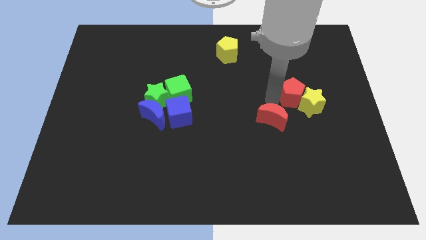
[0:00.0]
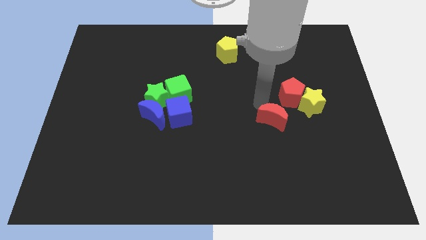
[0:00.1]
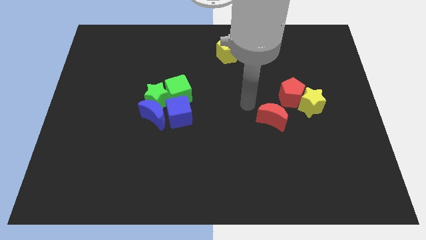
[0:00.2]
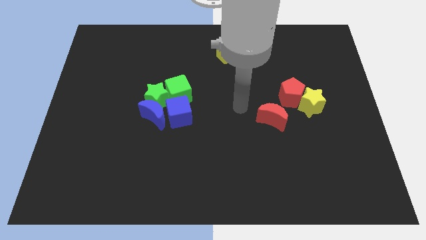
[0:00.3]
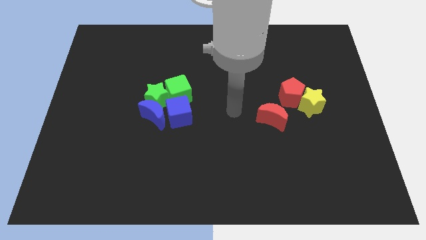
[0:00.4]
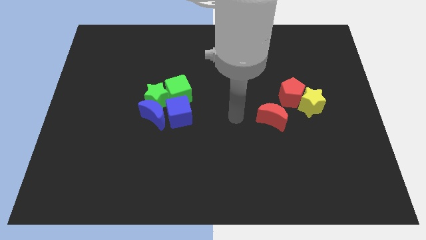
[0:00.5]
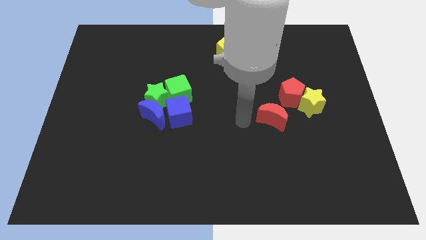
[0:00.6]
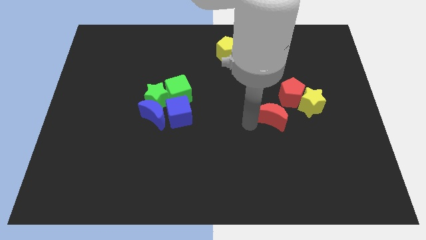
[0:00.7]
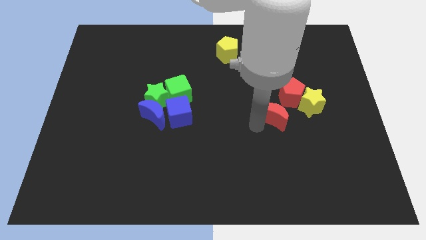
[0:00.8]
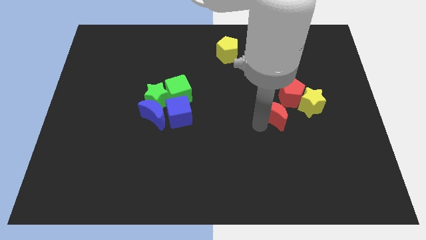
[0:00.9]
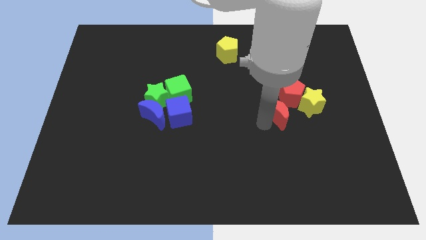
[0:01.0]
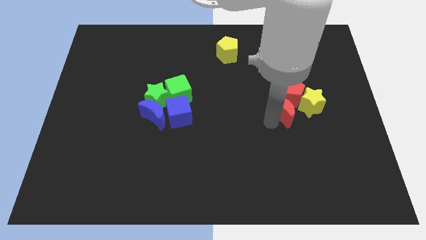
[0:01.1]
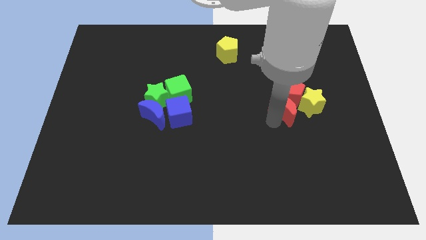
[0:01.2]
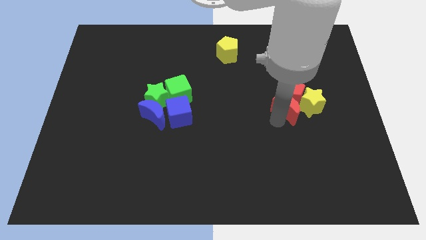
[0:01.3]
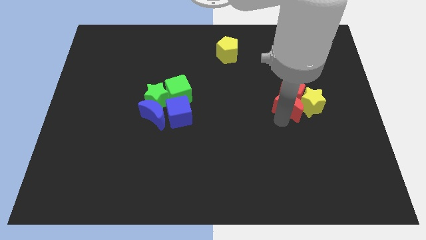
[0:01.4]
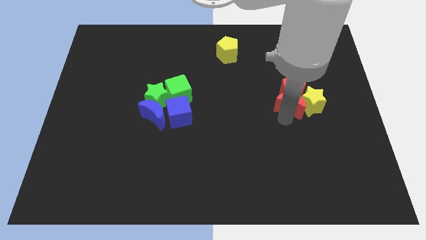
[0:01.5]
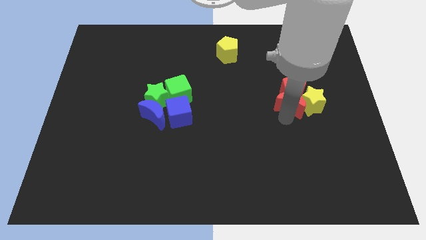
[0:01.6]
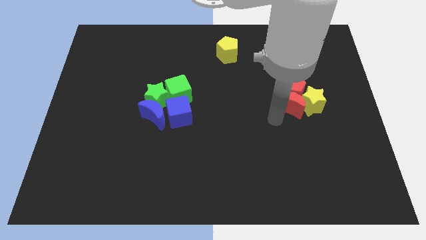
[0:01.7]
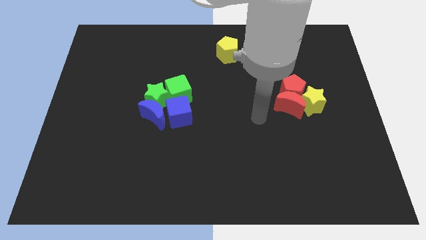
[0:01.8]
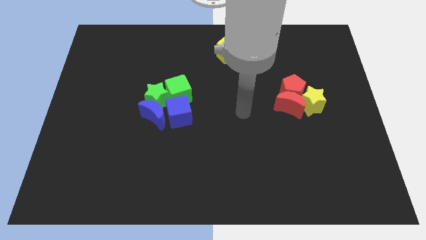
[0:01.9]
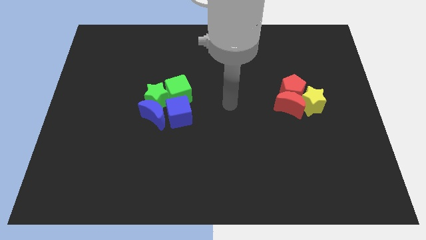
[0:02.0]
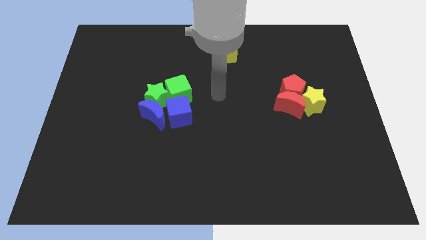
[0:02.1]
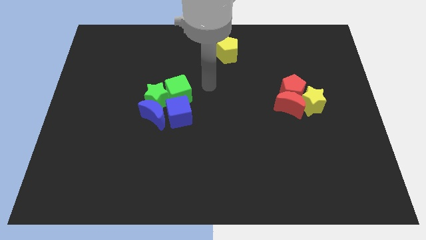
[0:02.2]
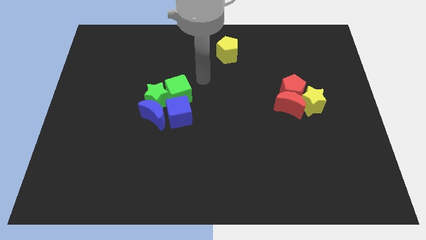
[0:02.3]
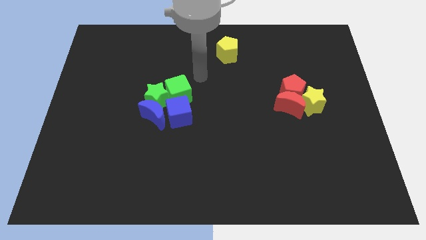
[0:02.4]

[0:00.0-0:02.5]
push the red moon into the red pentagon and yellow star

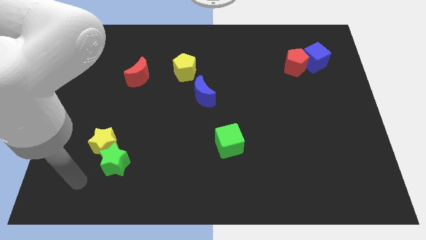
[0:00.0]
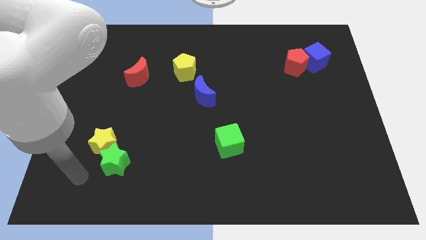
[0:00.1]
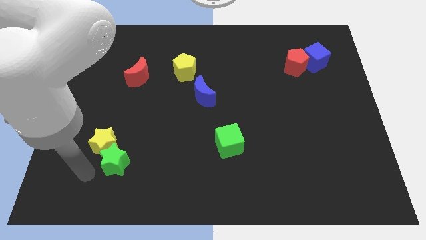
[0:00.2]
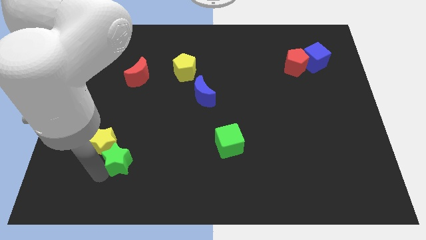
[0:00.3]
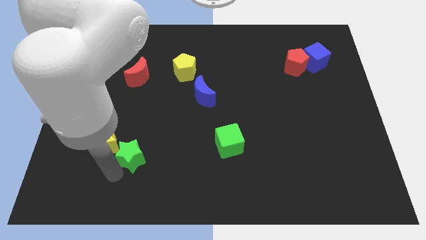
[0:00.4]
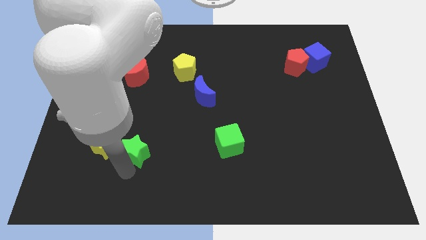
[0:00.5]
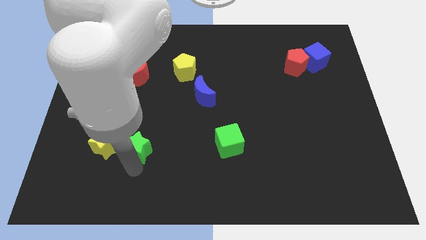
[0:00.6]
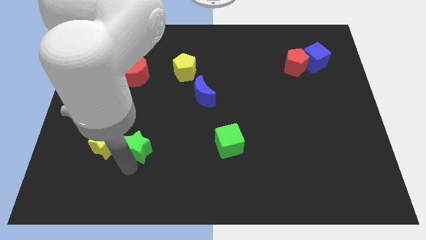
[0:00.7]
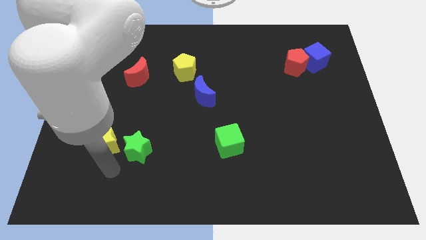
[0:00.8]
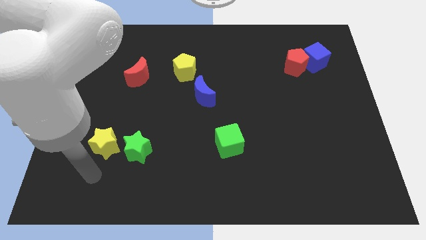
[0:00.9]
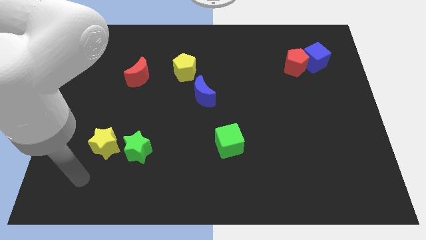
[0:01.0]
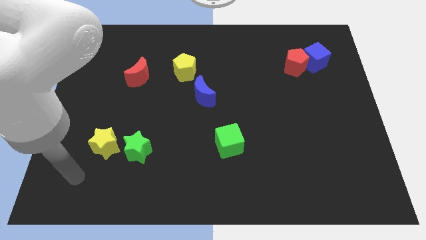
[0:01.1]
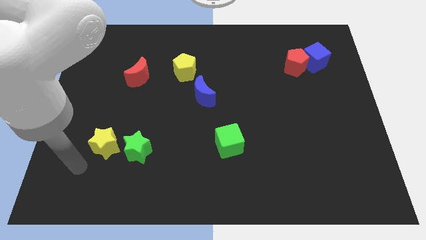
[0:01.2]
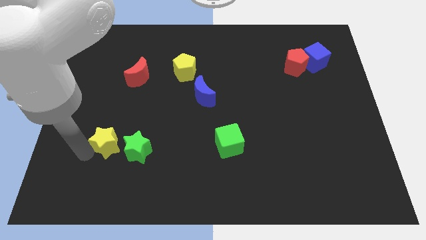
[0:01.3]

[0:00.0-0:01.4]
move the green star right beside the yellow star

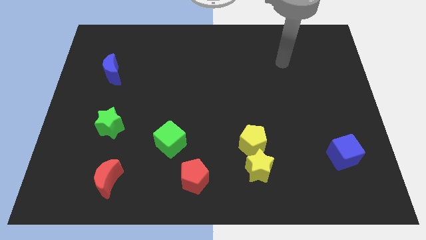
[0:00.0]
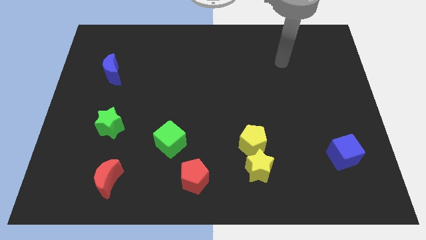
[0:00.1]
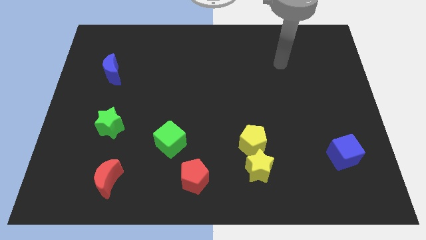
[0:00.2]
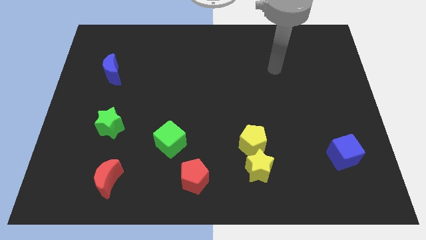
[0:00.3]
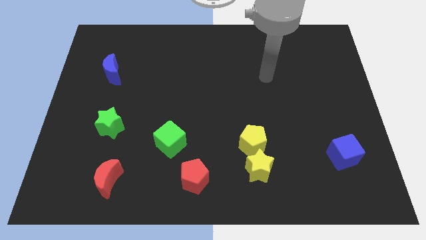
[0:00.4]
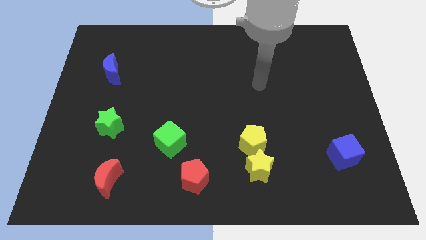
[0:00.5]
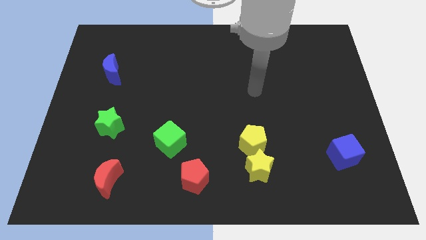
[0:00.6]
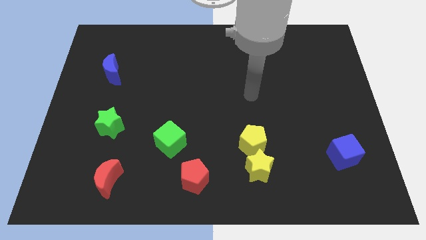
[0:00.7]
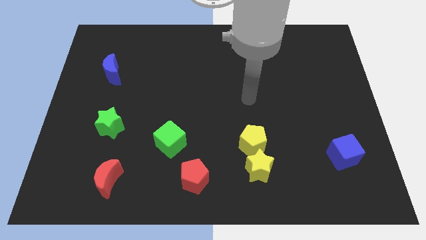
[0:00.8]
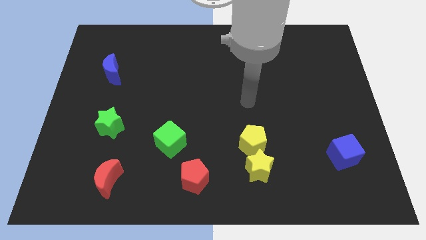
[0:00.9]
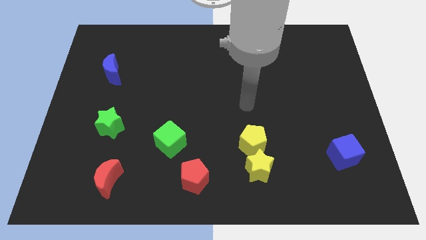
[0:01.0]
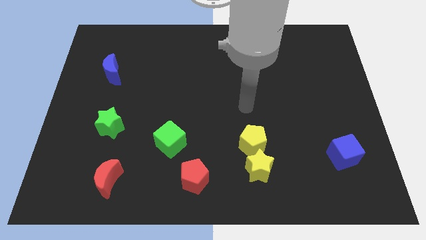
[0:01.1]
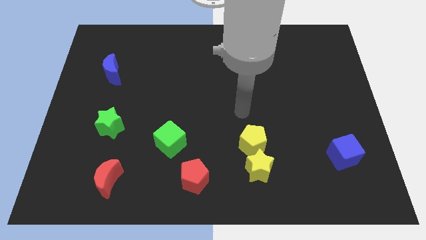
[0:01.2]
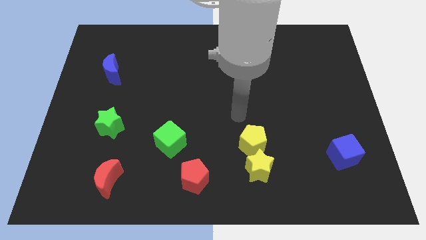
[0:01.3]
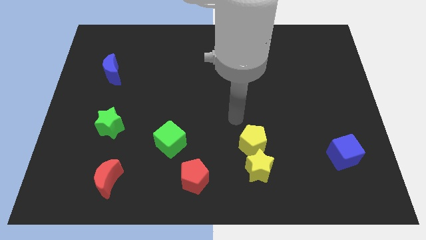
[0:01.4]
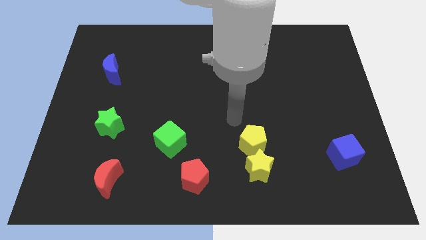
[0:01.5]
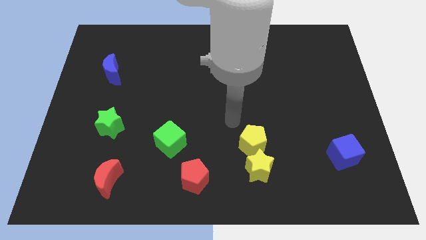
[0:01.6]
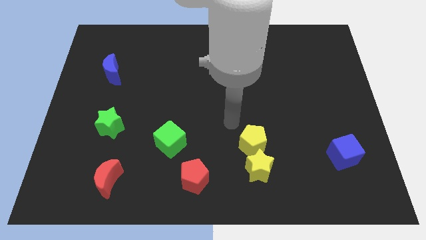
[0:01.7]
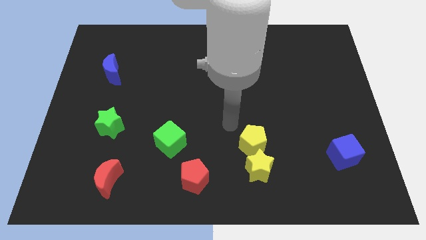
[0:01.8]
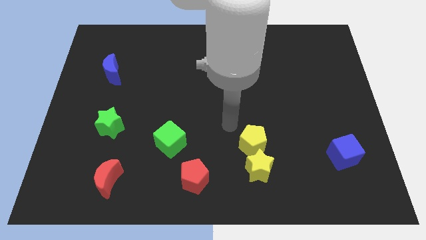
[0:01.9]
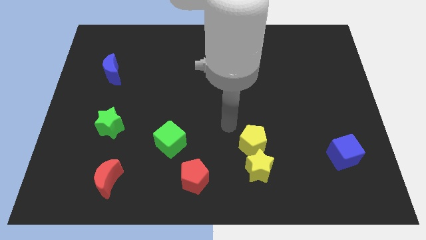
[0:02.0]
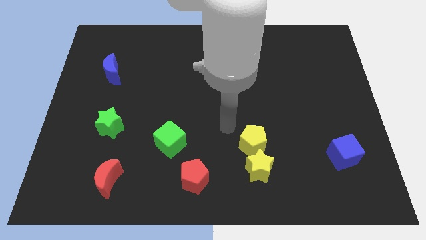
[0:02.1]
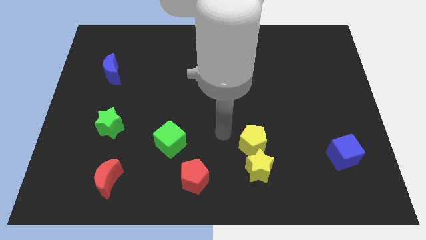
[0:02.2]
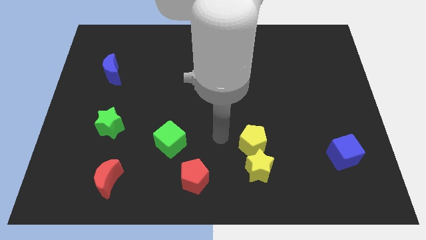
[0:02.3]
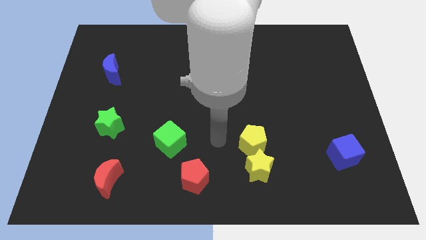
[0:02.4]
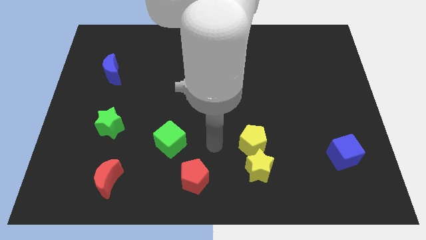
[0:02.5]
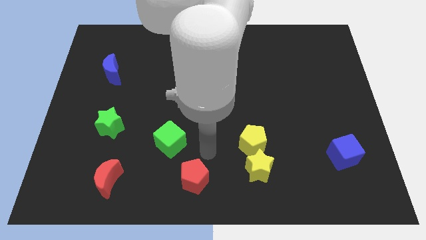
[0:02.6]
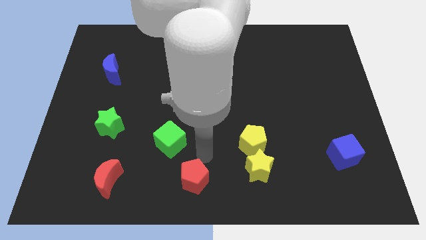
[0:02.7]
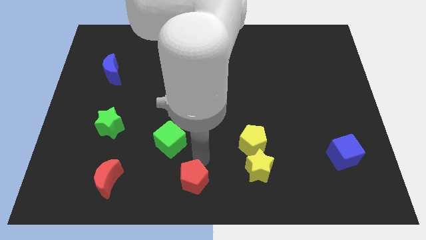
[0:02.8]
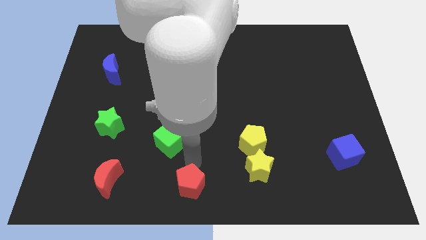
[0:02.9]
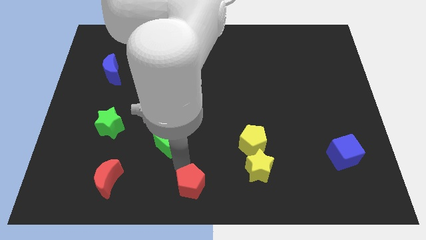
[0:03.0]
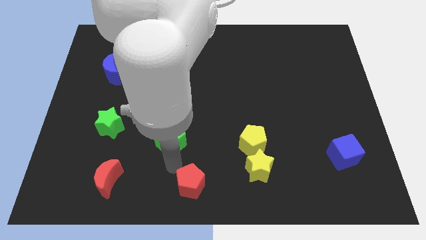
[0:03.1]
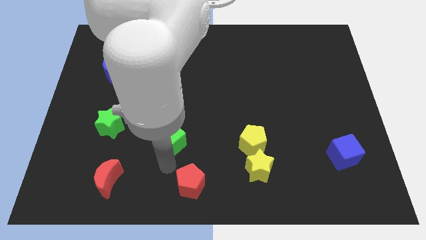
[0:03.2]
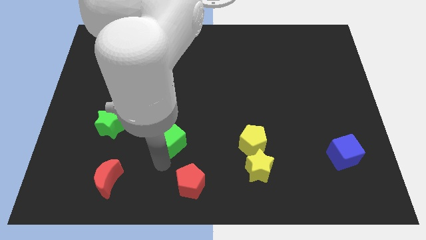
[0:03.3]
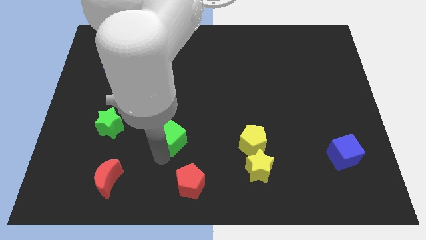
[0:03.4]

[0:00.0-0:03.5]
slightly push the red pentagon and green cube in opposite directions

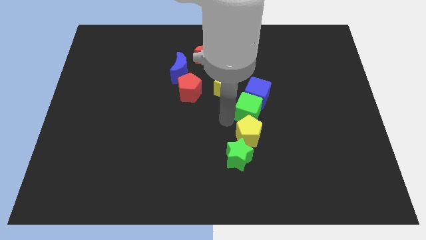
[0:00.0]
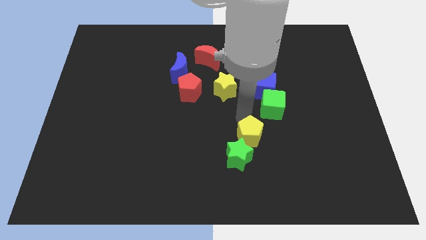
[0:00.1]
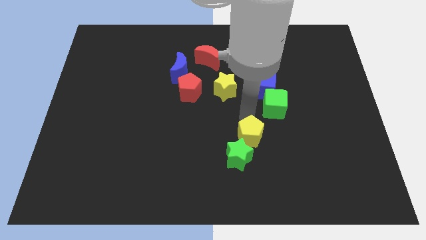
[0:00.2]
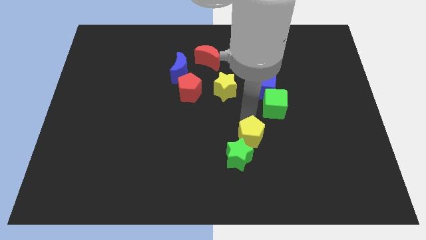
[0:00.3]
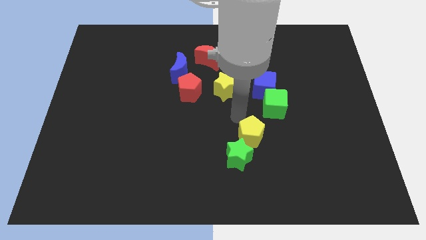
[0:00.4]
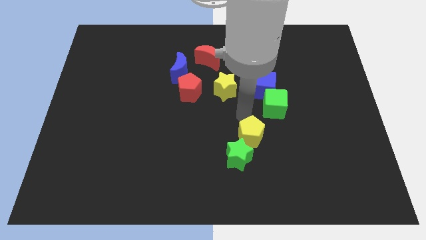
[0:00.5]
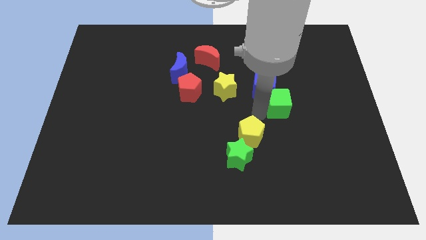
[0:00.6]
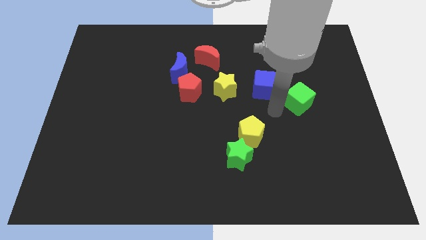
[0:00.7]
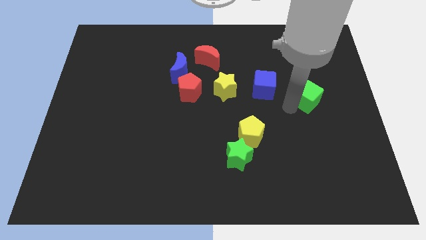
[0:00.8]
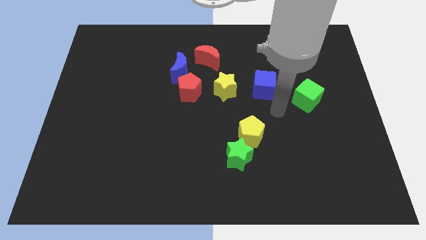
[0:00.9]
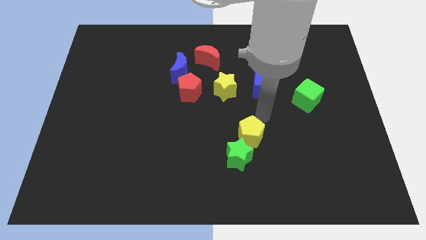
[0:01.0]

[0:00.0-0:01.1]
separate the green cube away from the blue cube

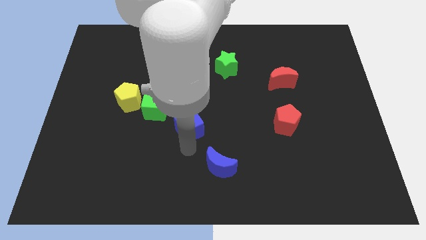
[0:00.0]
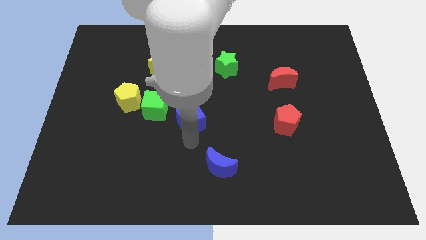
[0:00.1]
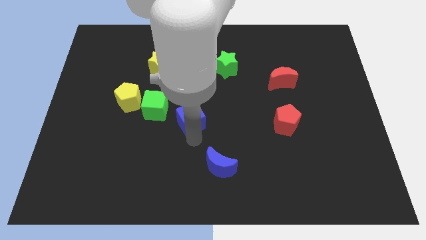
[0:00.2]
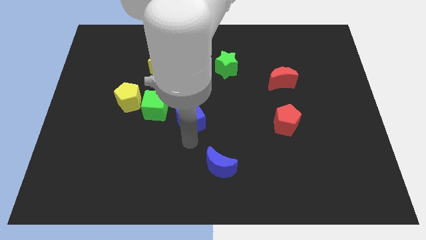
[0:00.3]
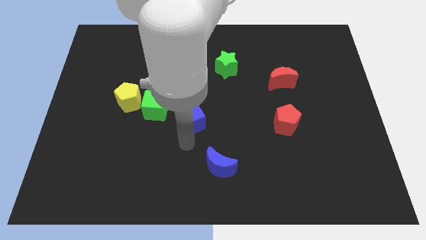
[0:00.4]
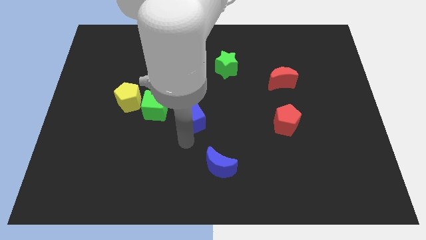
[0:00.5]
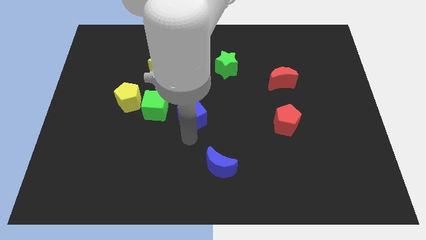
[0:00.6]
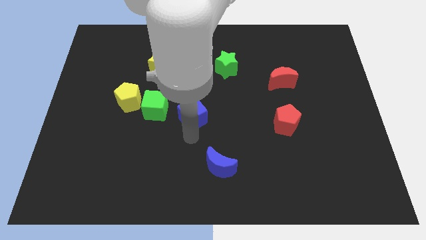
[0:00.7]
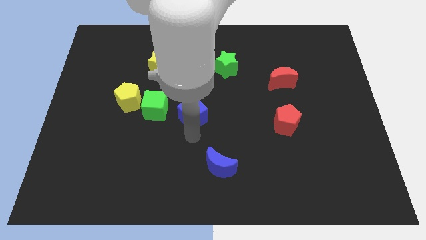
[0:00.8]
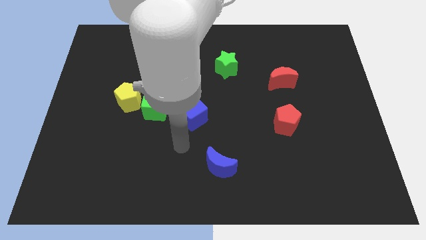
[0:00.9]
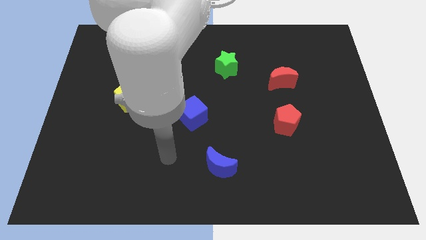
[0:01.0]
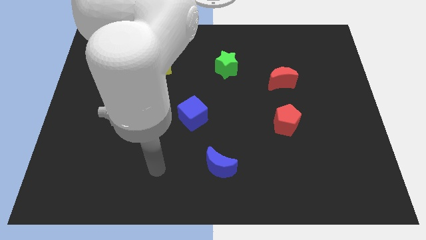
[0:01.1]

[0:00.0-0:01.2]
move blue cube right beside the green cube
